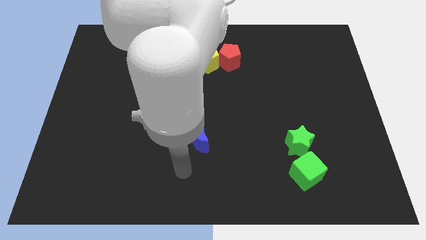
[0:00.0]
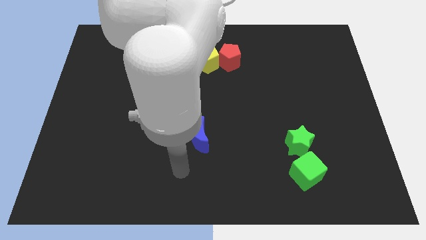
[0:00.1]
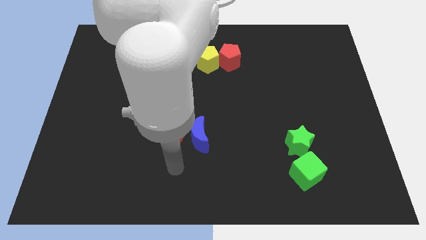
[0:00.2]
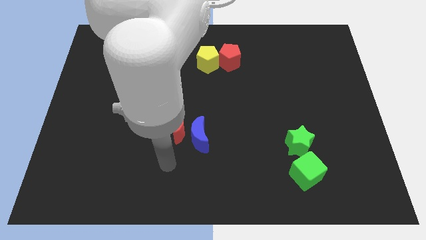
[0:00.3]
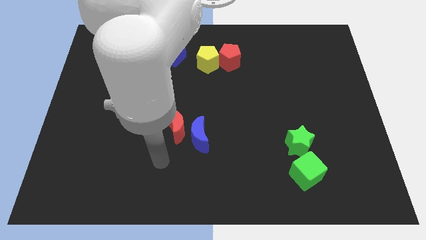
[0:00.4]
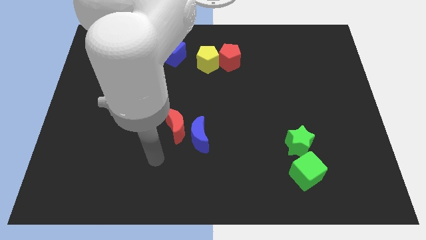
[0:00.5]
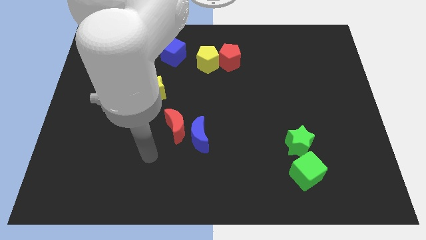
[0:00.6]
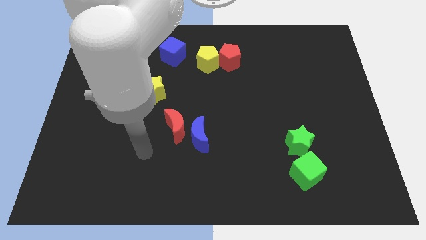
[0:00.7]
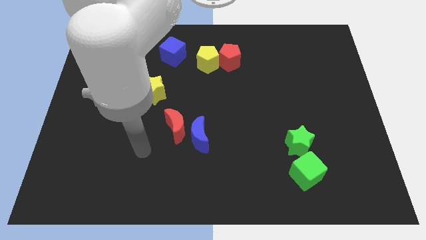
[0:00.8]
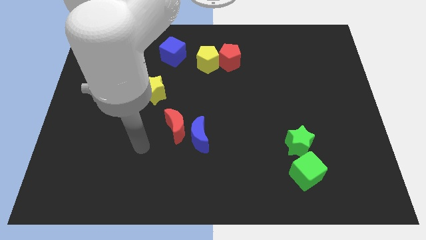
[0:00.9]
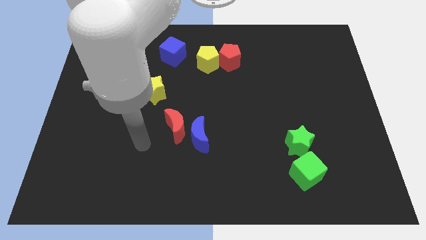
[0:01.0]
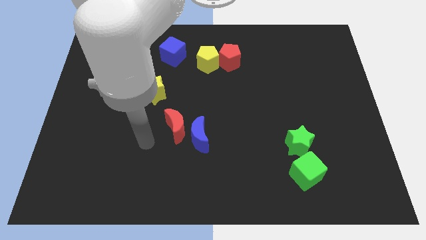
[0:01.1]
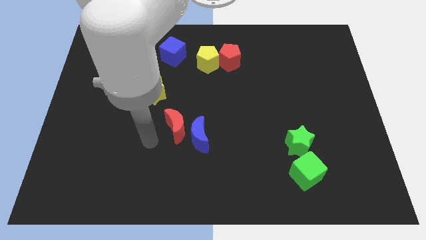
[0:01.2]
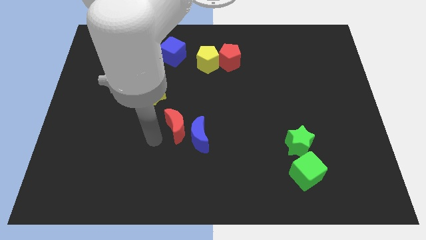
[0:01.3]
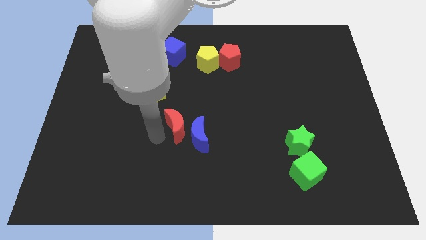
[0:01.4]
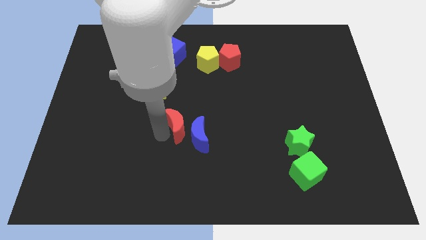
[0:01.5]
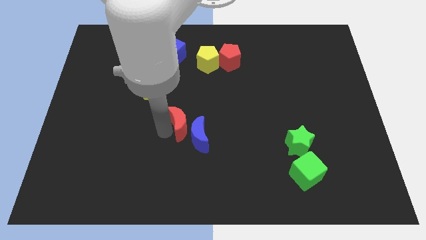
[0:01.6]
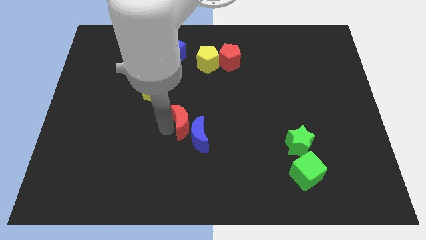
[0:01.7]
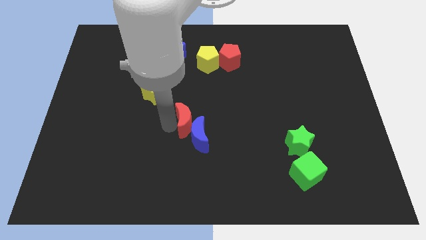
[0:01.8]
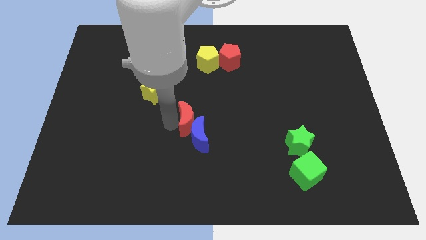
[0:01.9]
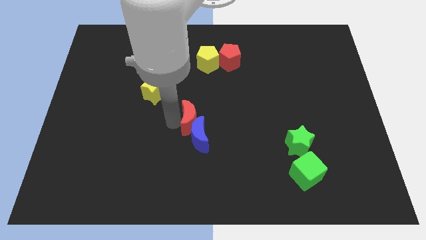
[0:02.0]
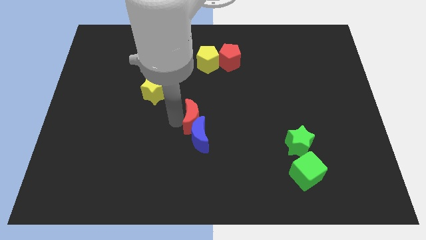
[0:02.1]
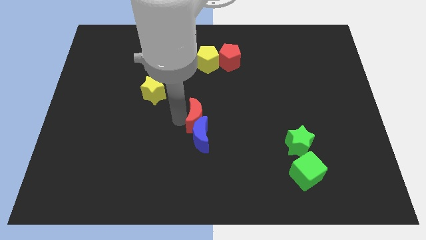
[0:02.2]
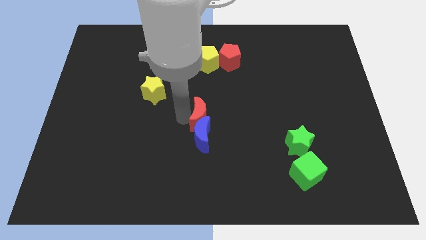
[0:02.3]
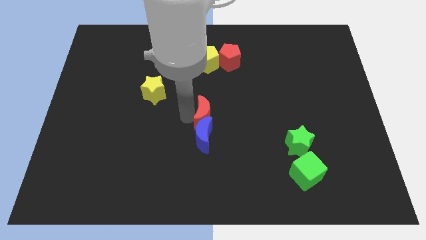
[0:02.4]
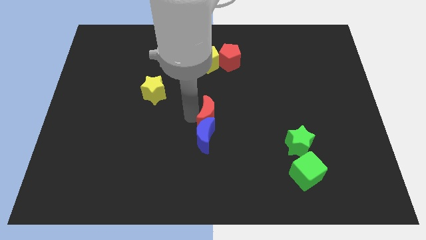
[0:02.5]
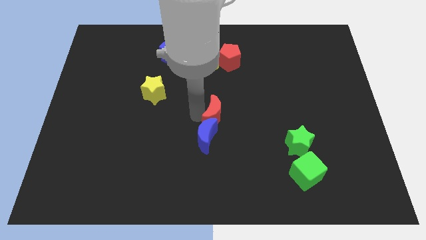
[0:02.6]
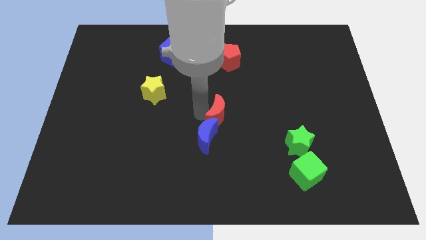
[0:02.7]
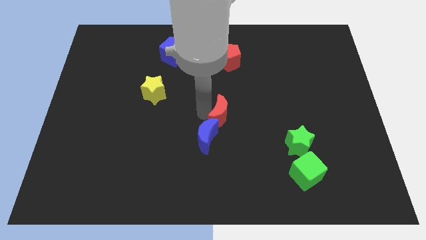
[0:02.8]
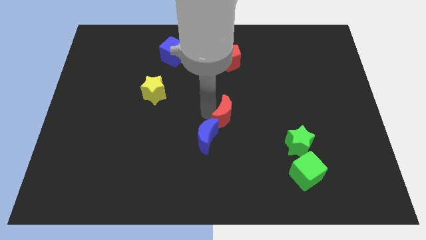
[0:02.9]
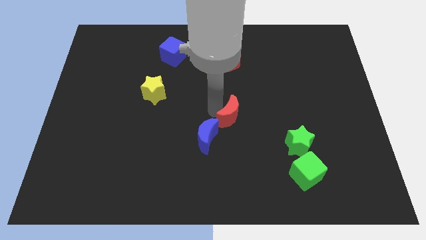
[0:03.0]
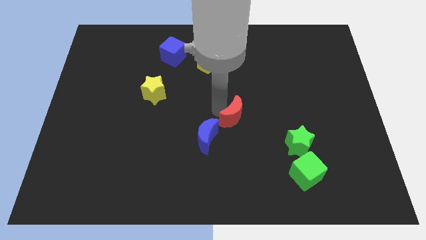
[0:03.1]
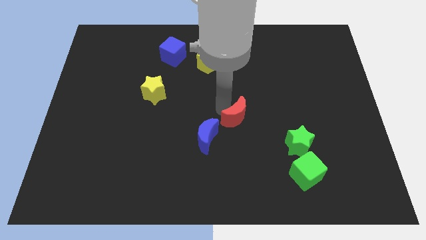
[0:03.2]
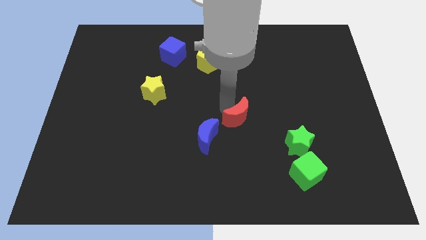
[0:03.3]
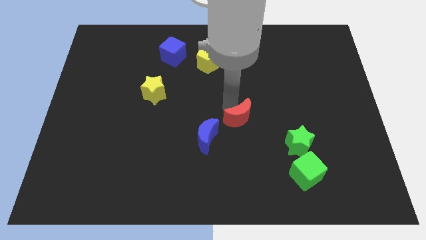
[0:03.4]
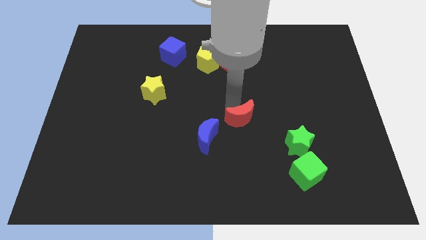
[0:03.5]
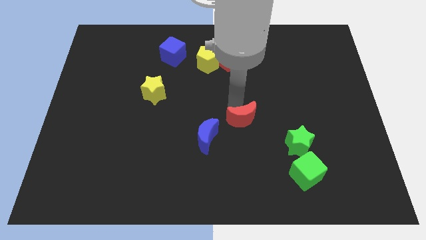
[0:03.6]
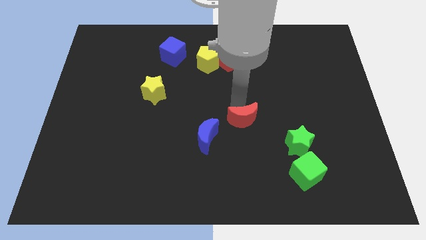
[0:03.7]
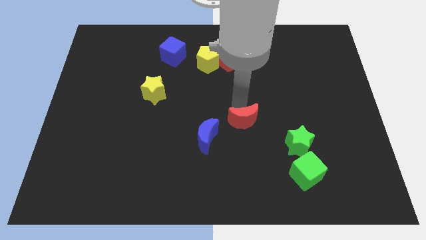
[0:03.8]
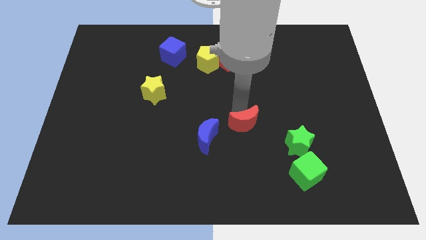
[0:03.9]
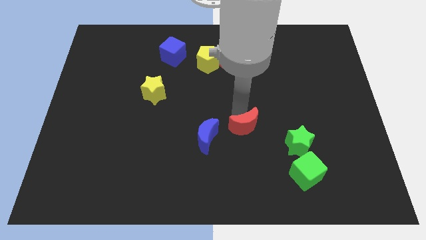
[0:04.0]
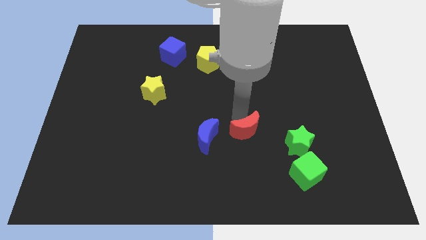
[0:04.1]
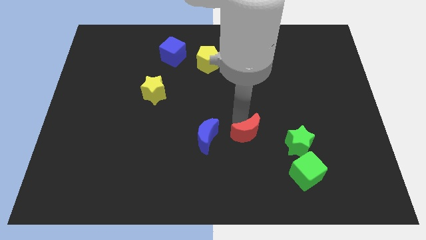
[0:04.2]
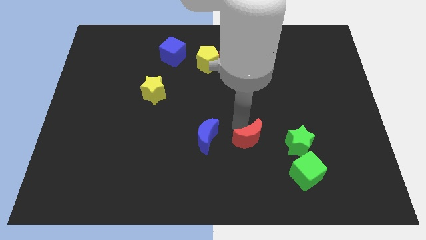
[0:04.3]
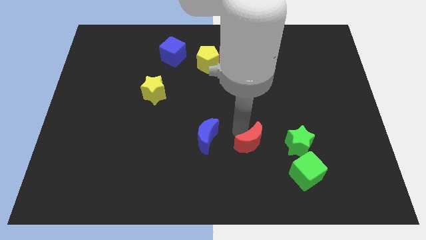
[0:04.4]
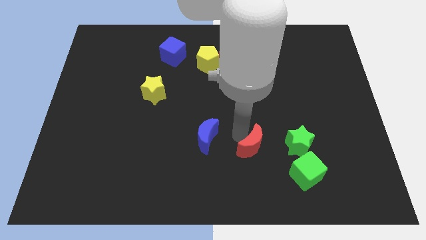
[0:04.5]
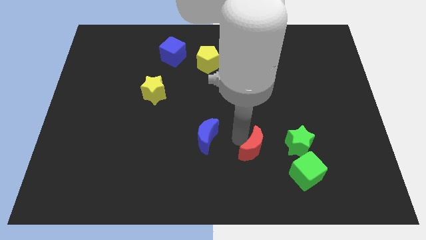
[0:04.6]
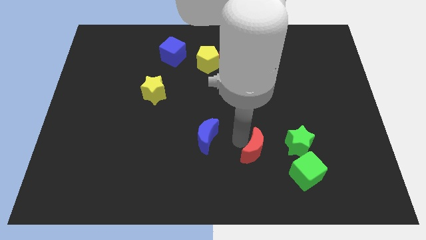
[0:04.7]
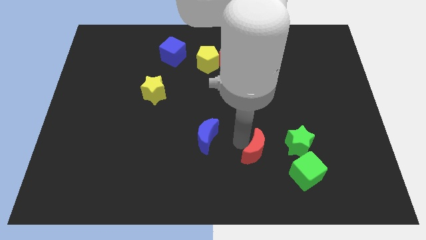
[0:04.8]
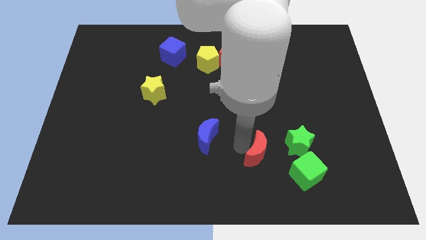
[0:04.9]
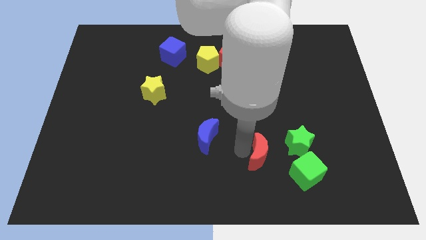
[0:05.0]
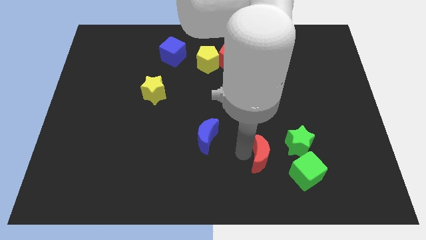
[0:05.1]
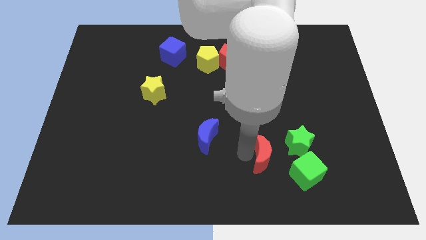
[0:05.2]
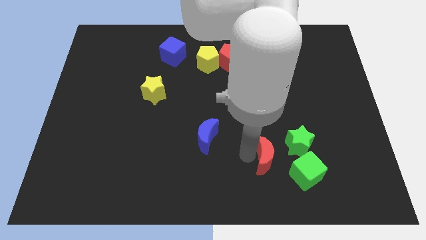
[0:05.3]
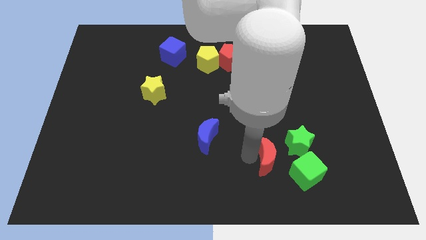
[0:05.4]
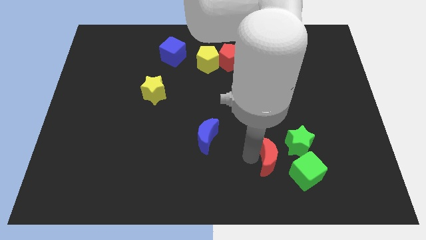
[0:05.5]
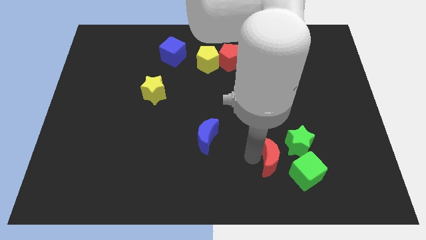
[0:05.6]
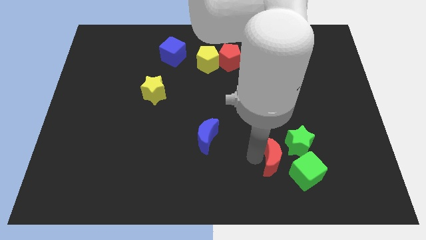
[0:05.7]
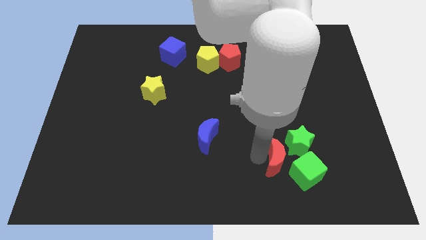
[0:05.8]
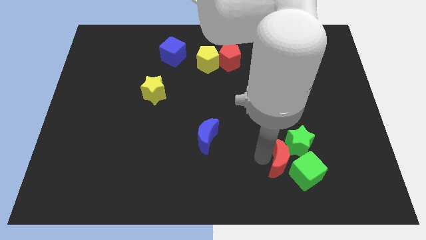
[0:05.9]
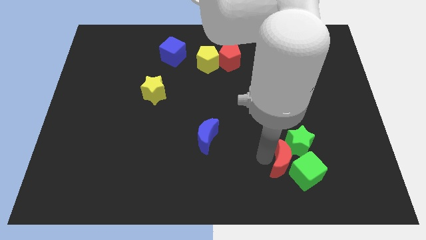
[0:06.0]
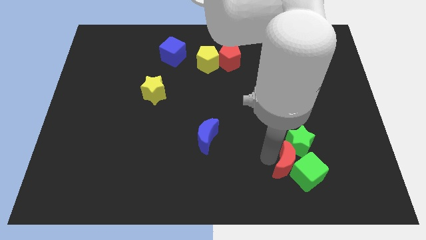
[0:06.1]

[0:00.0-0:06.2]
move the red moon close to the green cube

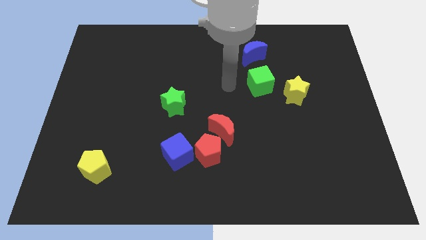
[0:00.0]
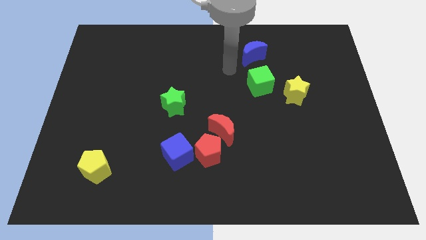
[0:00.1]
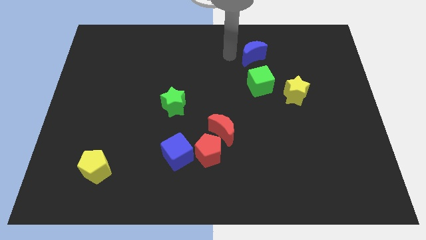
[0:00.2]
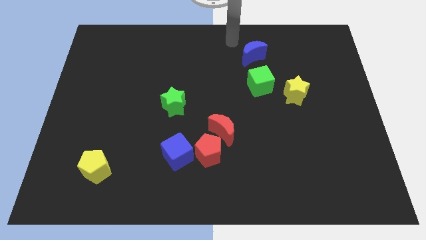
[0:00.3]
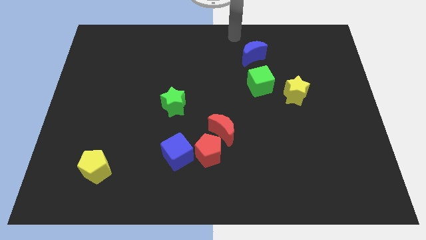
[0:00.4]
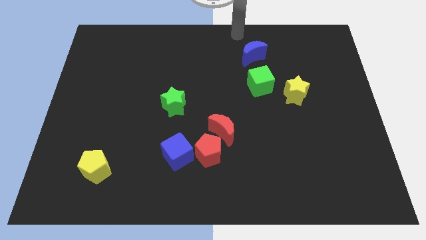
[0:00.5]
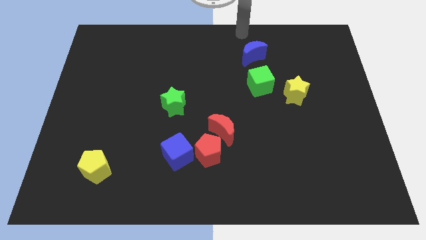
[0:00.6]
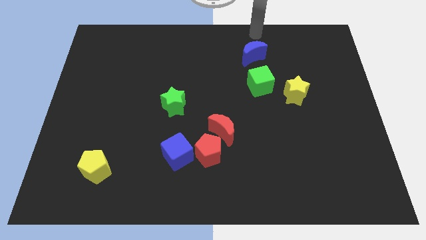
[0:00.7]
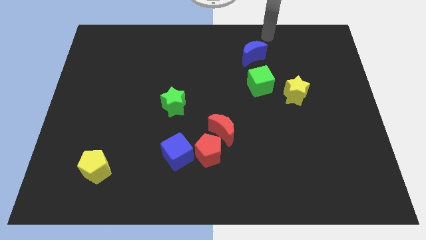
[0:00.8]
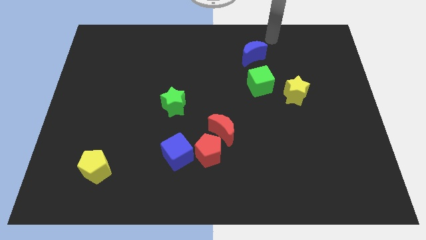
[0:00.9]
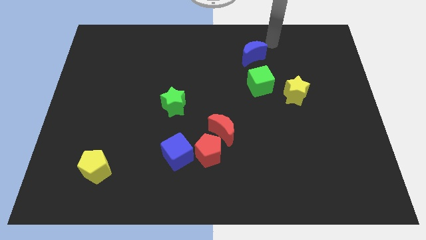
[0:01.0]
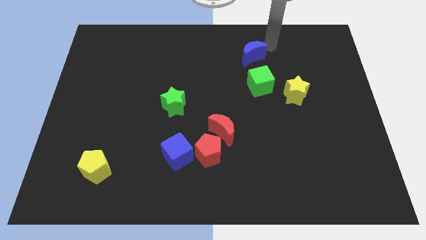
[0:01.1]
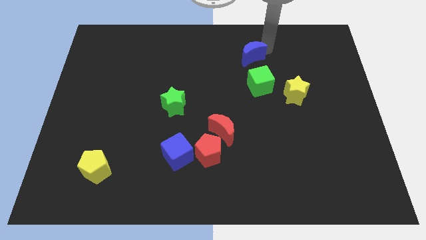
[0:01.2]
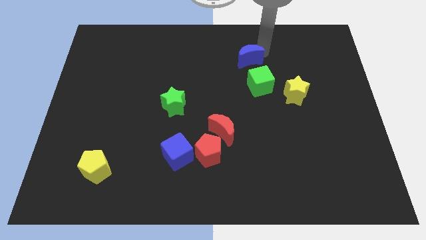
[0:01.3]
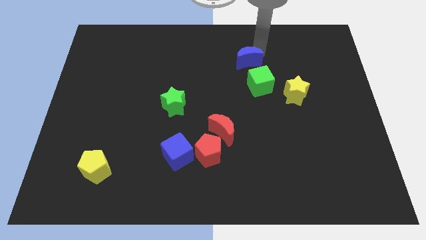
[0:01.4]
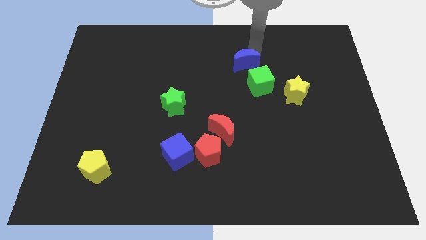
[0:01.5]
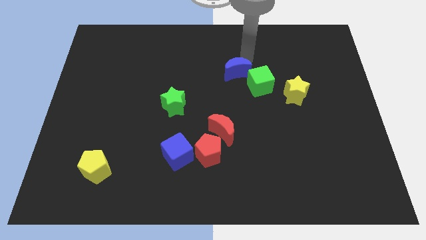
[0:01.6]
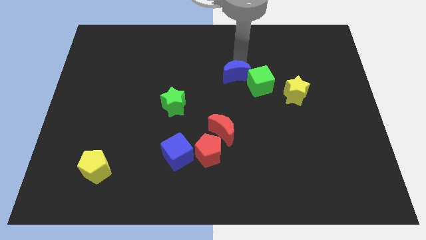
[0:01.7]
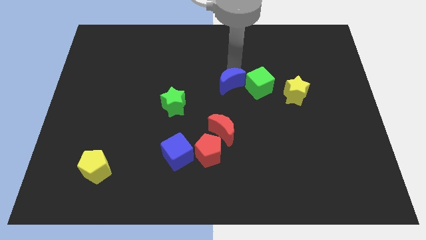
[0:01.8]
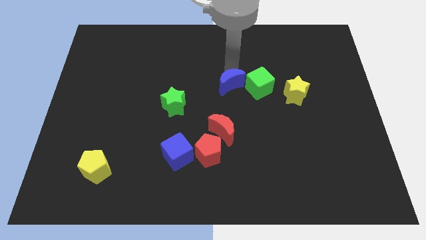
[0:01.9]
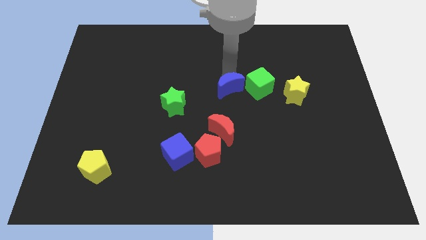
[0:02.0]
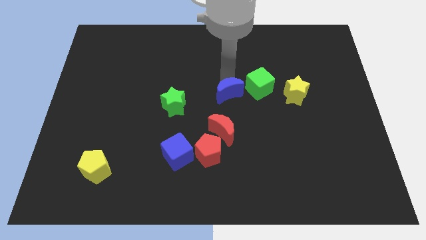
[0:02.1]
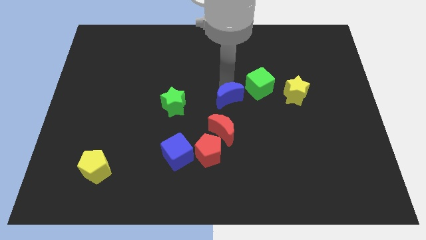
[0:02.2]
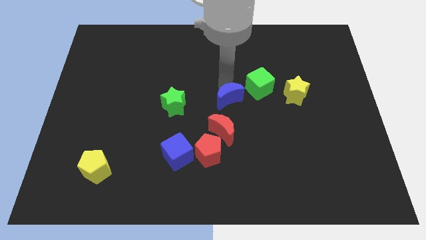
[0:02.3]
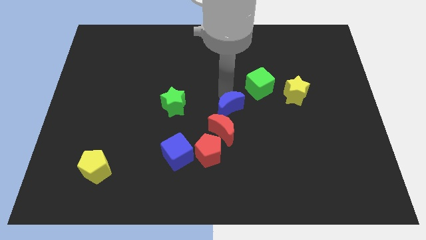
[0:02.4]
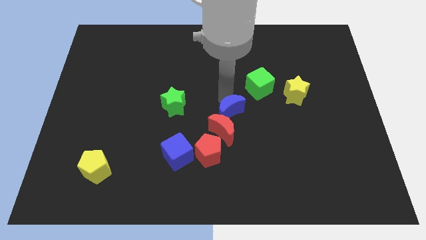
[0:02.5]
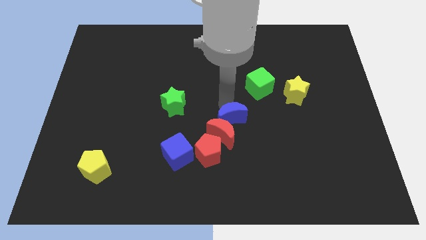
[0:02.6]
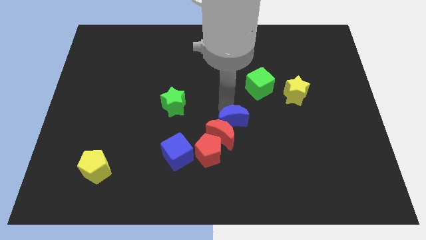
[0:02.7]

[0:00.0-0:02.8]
put the blue moon close to the red moon
